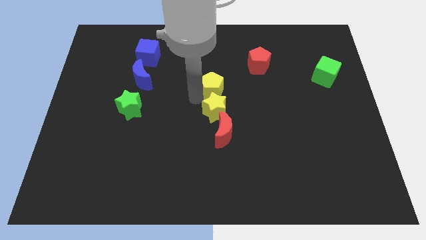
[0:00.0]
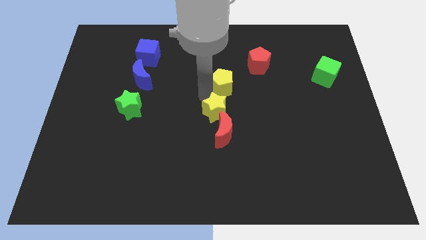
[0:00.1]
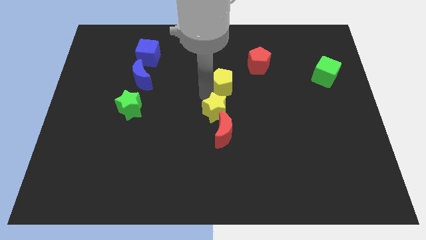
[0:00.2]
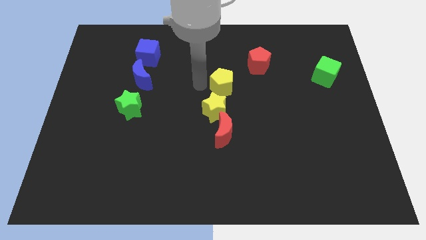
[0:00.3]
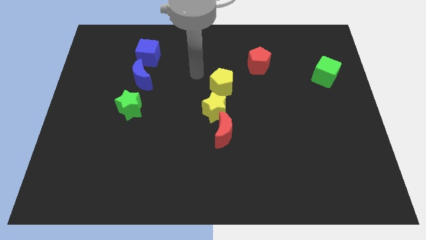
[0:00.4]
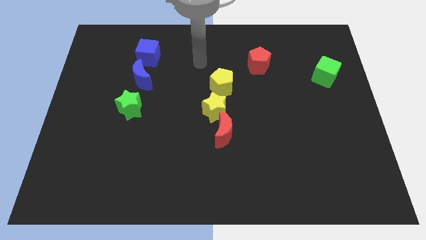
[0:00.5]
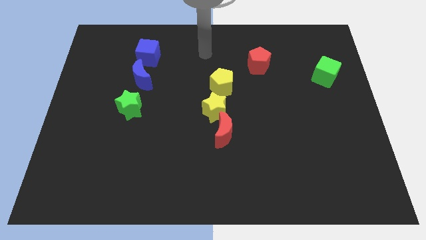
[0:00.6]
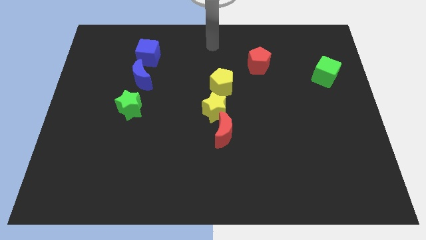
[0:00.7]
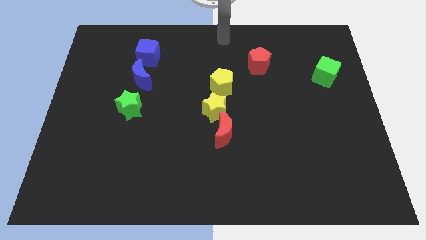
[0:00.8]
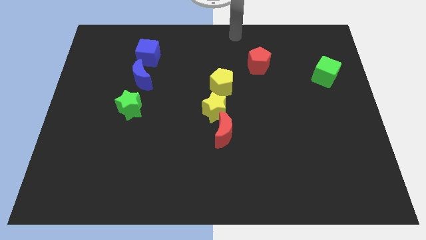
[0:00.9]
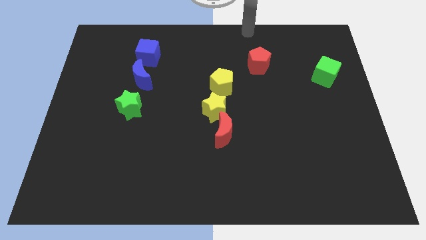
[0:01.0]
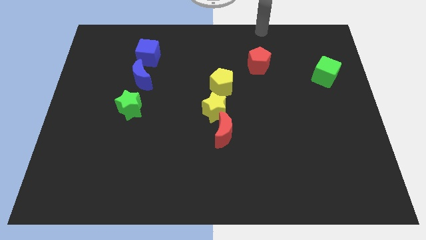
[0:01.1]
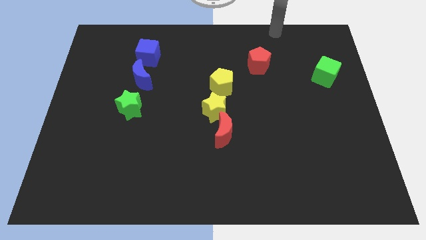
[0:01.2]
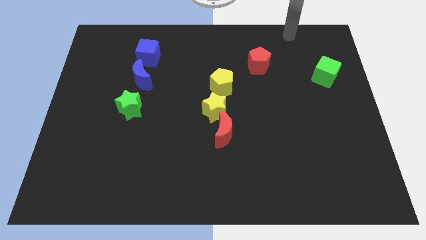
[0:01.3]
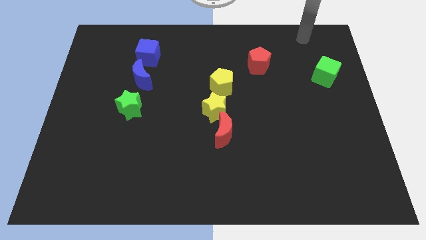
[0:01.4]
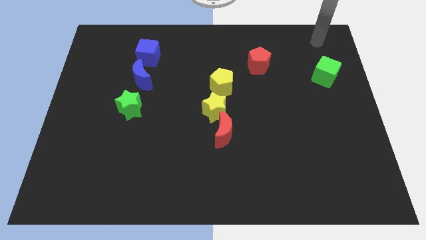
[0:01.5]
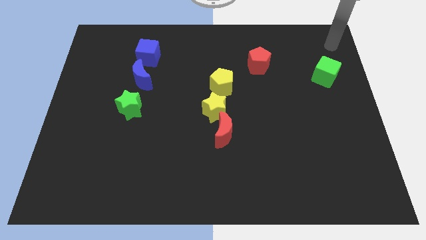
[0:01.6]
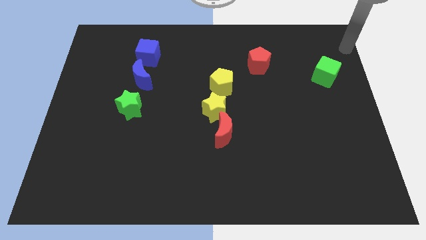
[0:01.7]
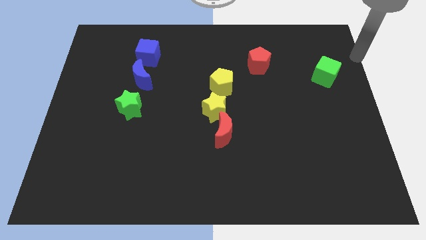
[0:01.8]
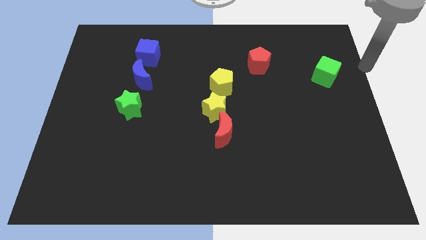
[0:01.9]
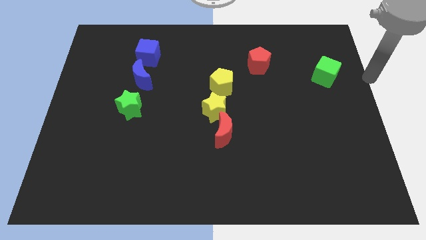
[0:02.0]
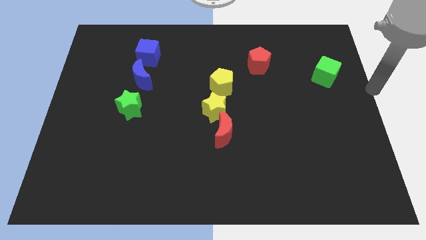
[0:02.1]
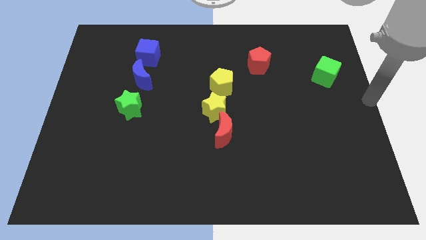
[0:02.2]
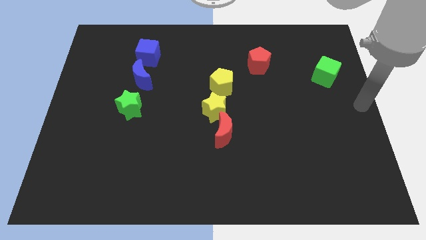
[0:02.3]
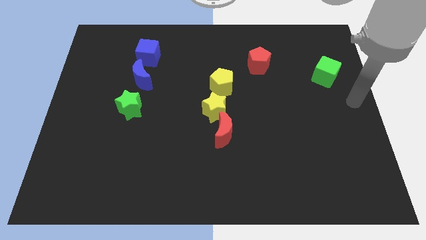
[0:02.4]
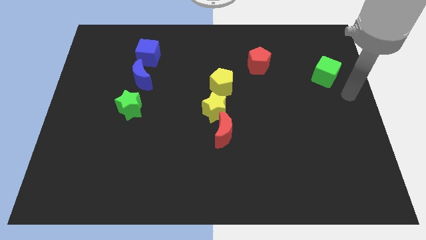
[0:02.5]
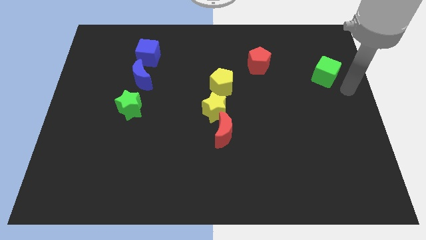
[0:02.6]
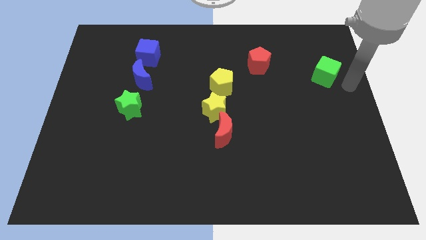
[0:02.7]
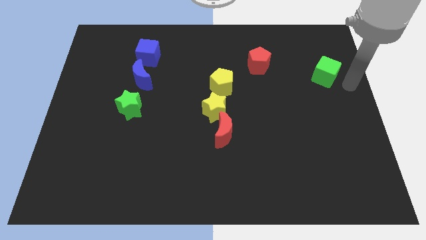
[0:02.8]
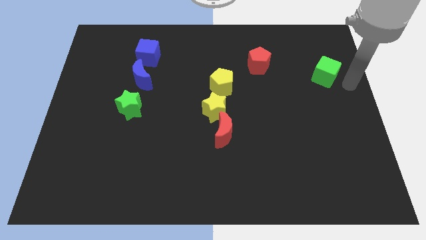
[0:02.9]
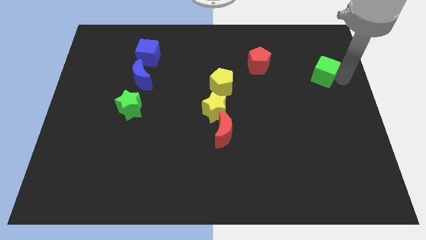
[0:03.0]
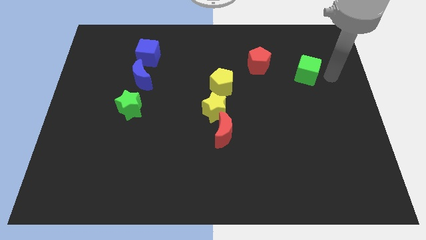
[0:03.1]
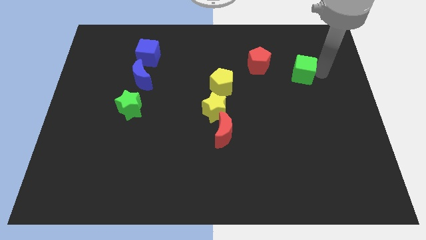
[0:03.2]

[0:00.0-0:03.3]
slide the green cube towards the red pentagon

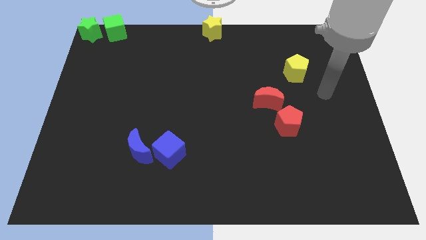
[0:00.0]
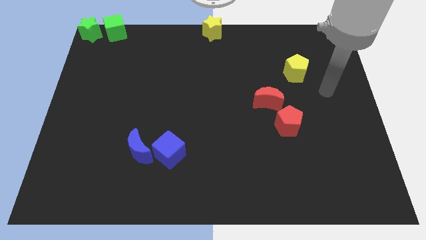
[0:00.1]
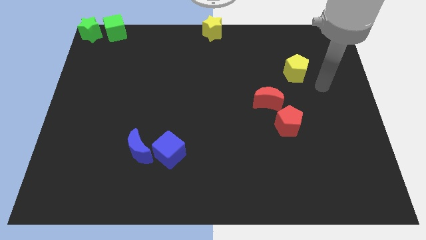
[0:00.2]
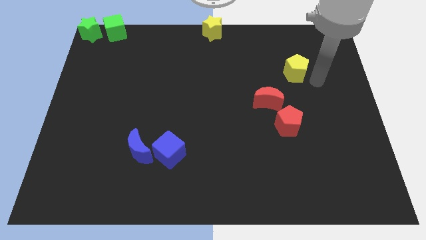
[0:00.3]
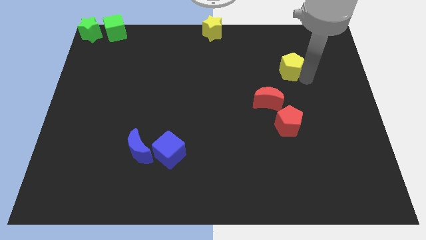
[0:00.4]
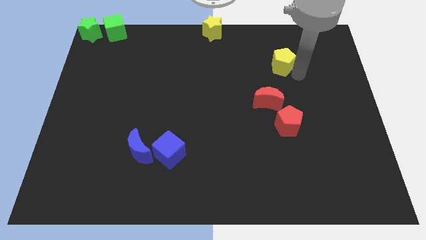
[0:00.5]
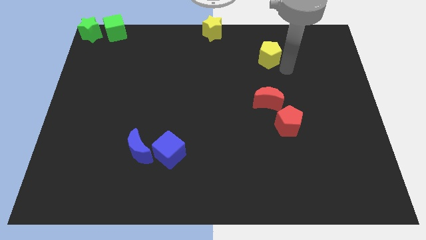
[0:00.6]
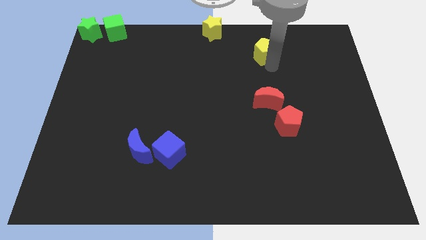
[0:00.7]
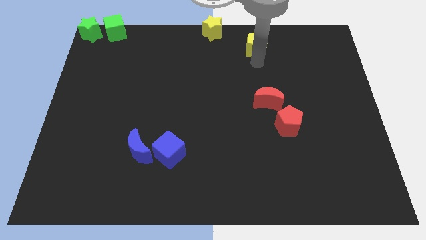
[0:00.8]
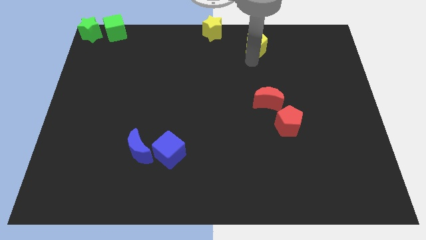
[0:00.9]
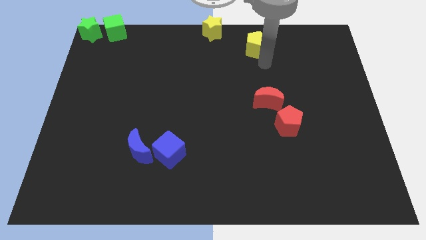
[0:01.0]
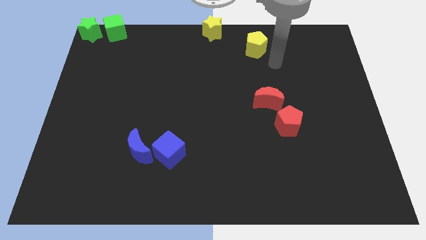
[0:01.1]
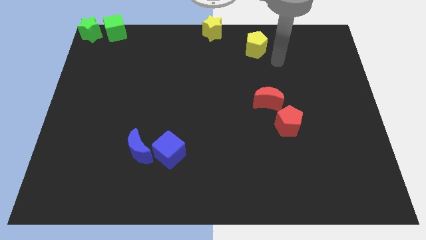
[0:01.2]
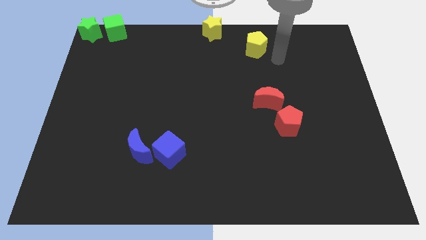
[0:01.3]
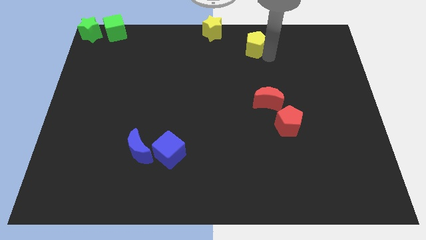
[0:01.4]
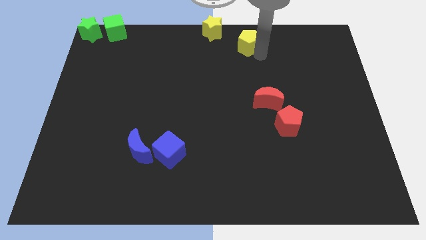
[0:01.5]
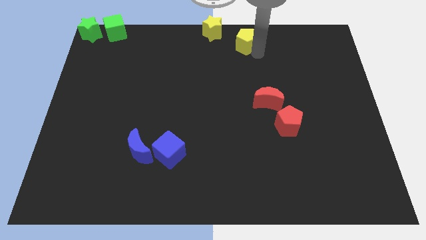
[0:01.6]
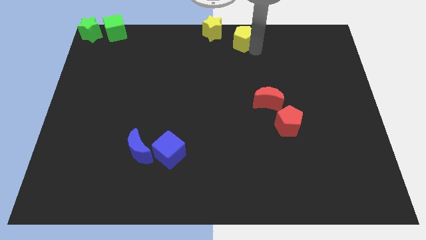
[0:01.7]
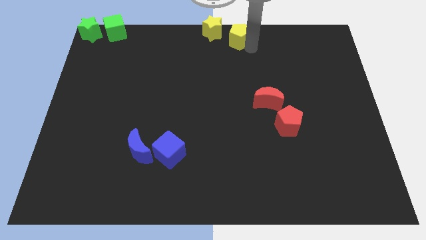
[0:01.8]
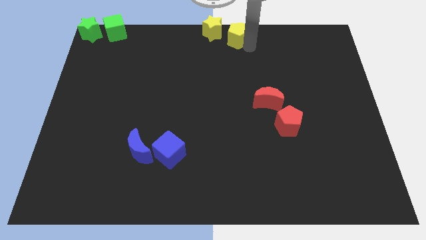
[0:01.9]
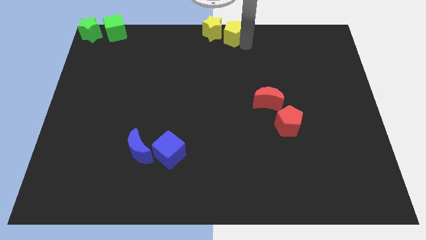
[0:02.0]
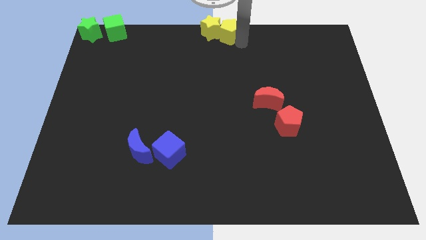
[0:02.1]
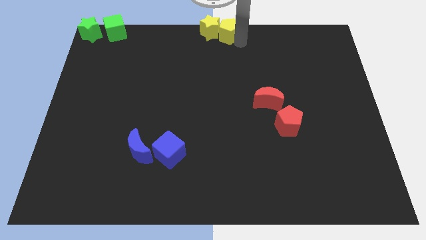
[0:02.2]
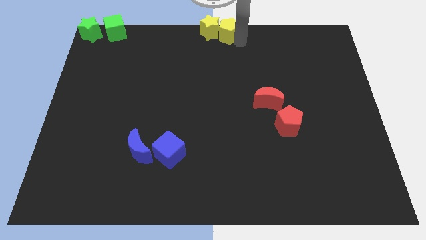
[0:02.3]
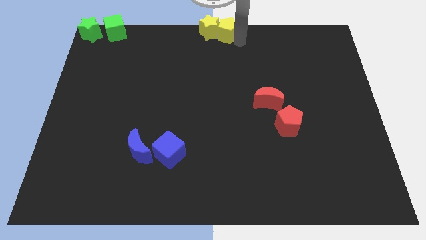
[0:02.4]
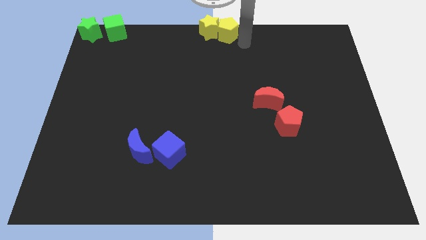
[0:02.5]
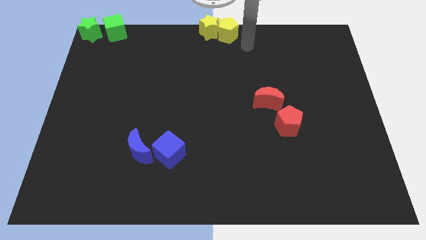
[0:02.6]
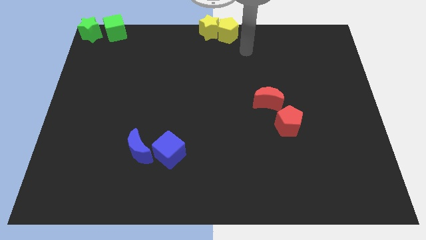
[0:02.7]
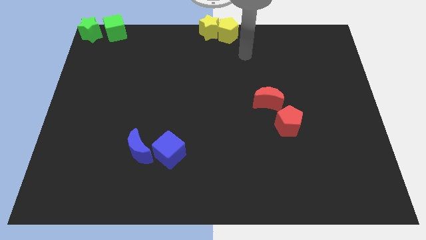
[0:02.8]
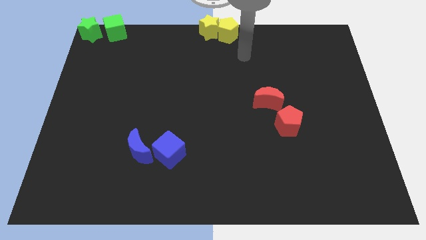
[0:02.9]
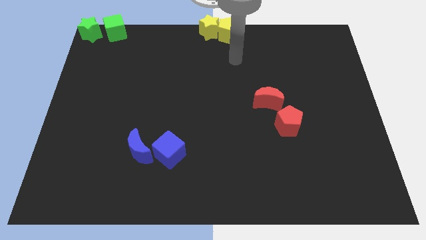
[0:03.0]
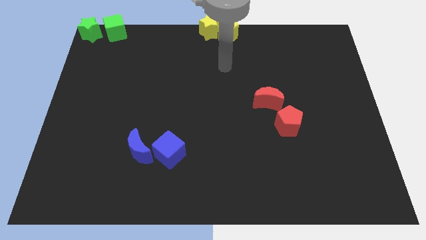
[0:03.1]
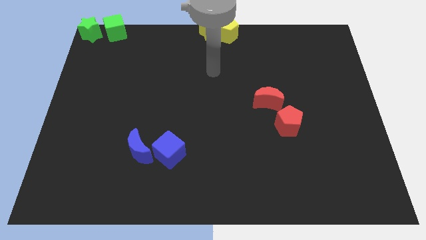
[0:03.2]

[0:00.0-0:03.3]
place the yellow pentagon right to the yellow star

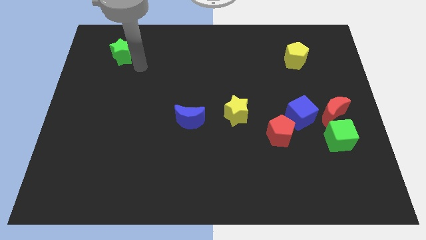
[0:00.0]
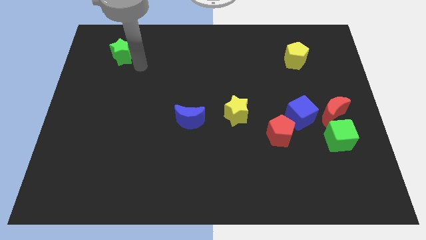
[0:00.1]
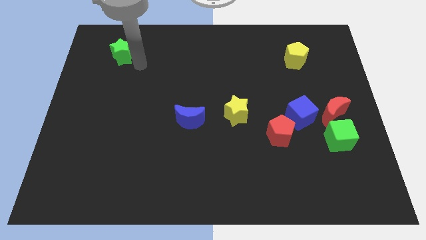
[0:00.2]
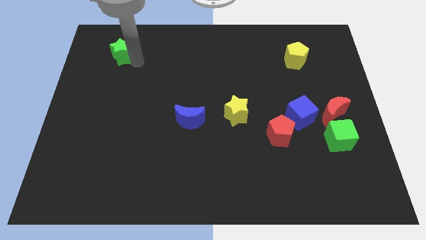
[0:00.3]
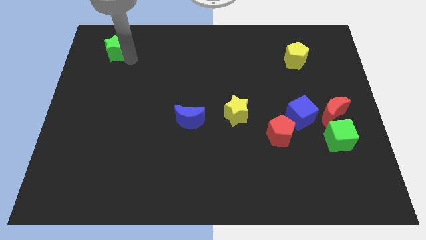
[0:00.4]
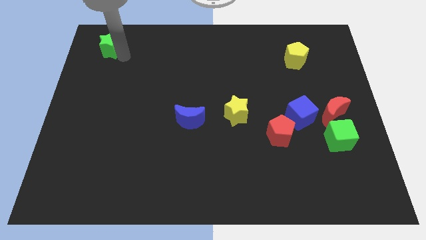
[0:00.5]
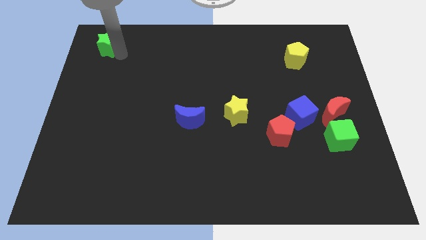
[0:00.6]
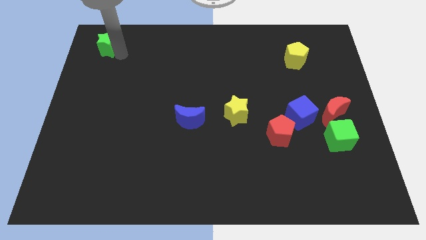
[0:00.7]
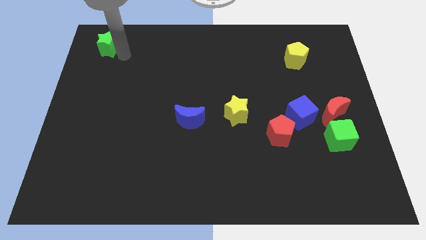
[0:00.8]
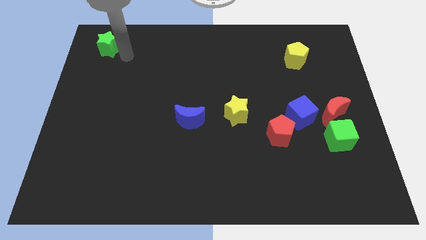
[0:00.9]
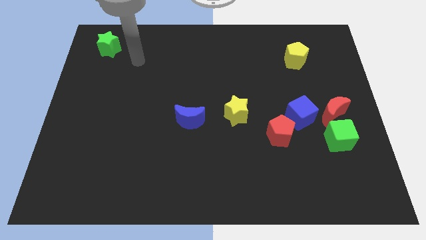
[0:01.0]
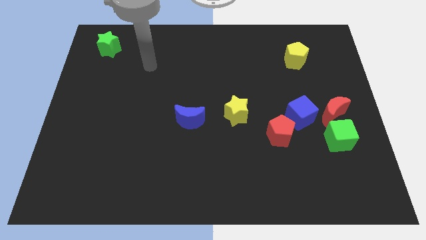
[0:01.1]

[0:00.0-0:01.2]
push green star to top left corner

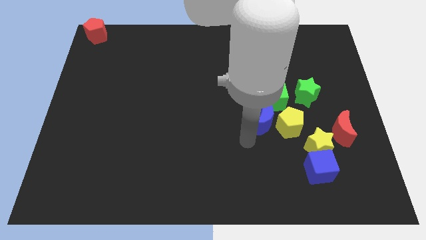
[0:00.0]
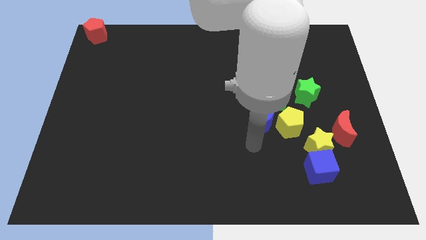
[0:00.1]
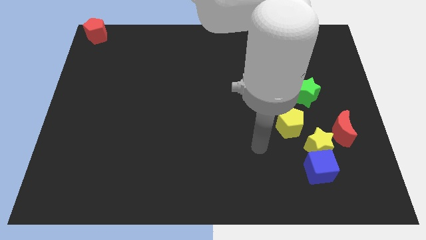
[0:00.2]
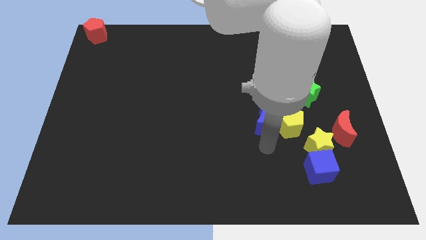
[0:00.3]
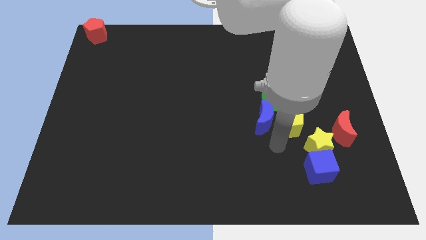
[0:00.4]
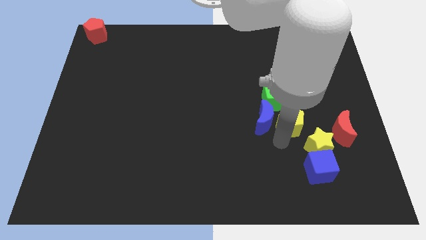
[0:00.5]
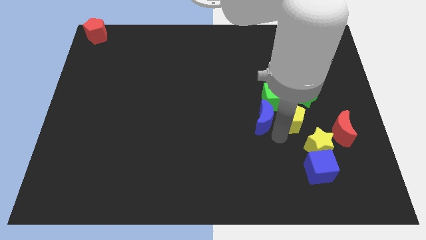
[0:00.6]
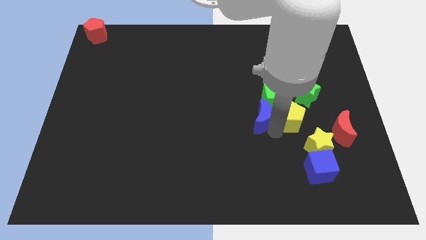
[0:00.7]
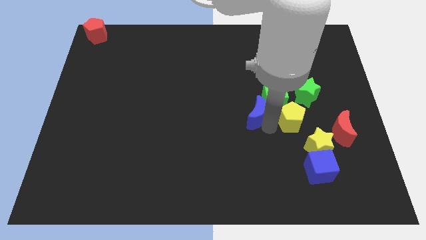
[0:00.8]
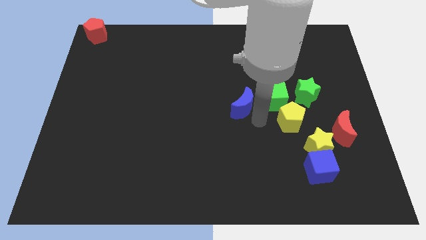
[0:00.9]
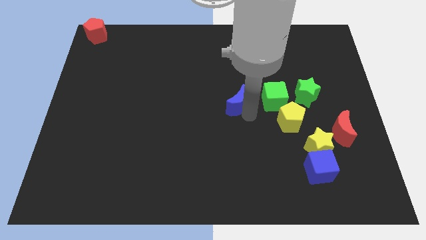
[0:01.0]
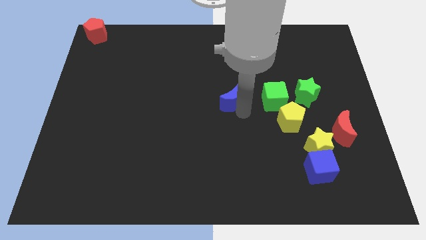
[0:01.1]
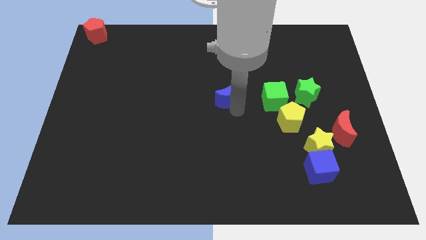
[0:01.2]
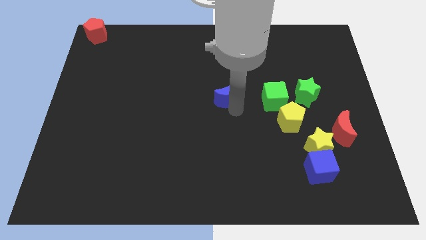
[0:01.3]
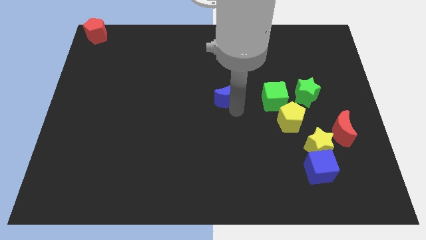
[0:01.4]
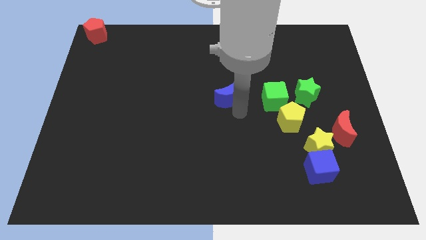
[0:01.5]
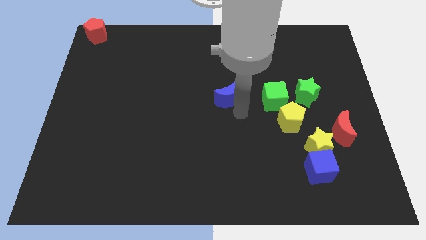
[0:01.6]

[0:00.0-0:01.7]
place the blue moon to the left of the green cube
